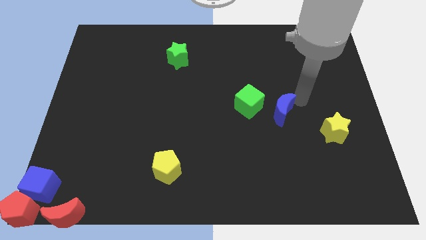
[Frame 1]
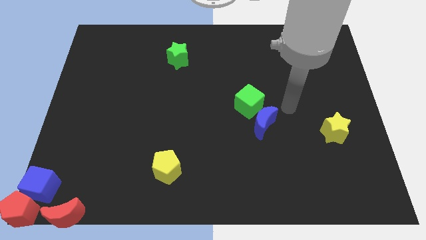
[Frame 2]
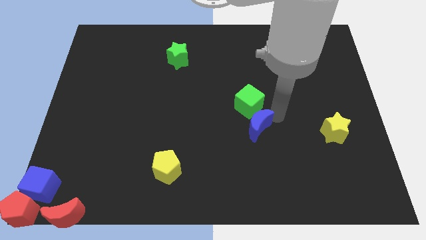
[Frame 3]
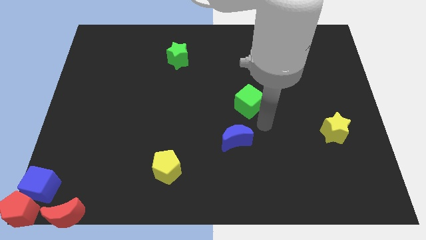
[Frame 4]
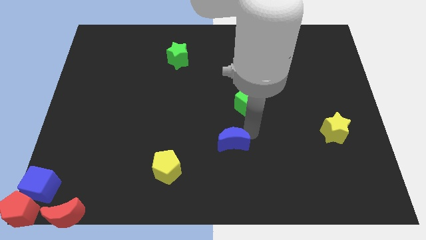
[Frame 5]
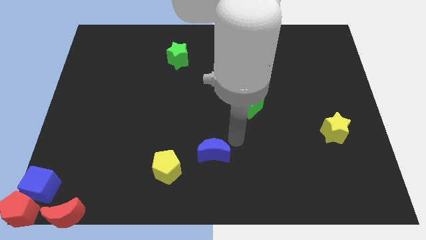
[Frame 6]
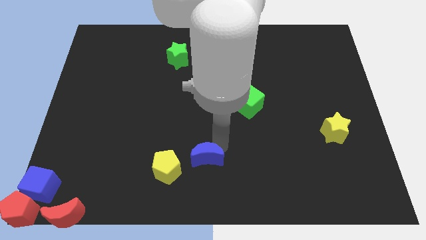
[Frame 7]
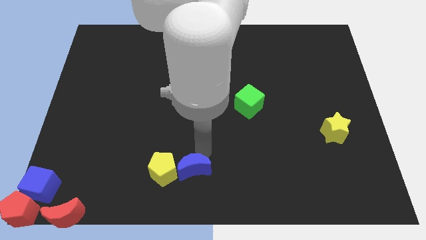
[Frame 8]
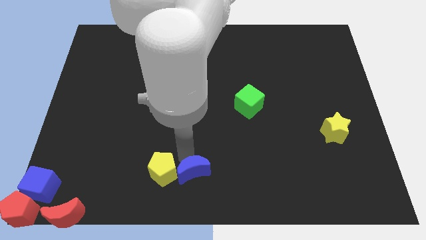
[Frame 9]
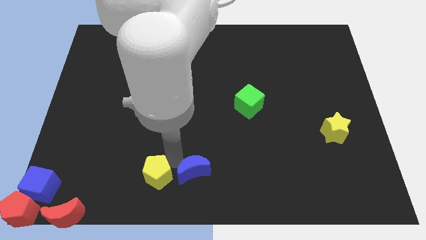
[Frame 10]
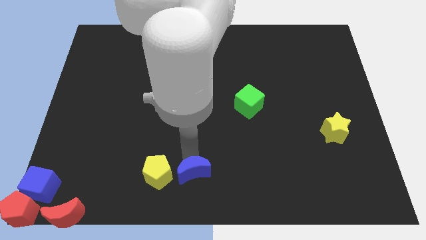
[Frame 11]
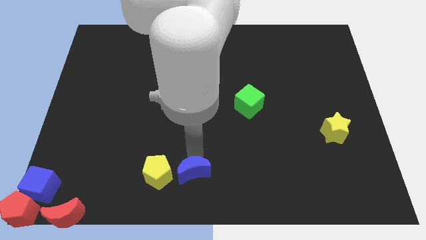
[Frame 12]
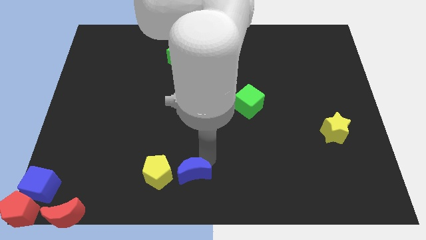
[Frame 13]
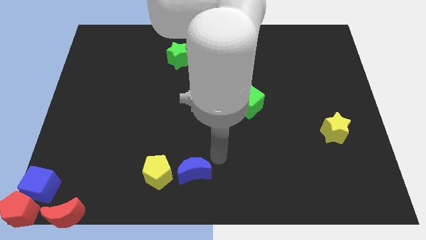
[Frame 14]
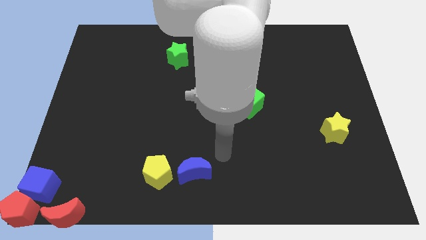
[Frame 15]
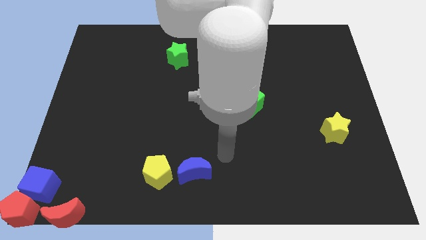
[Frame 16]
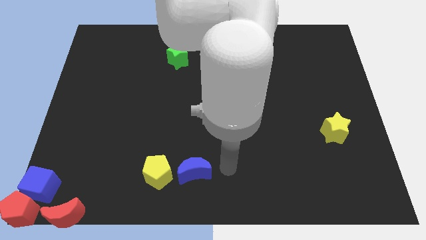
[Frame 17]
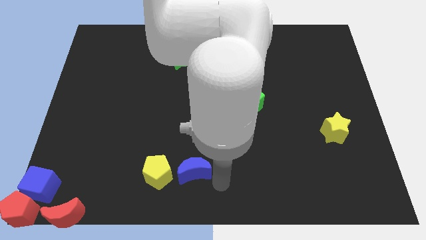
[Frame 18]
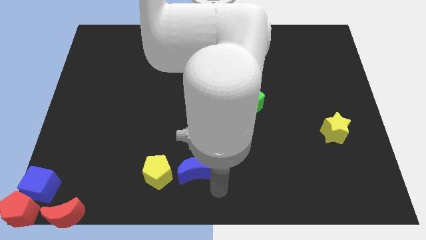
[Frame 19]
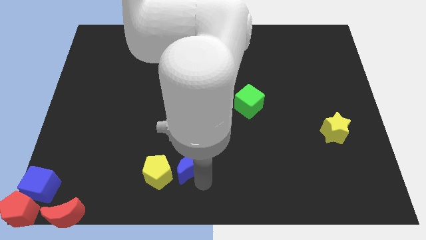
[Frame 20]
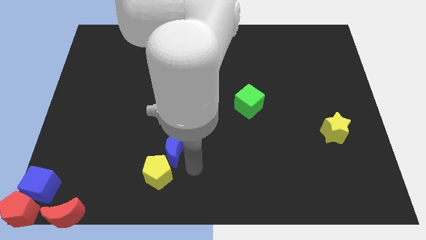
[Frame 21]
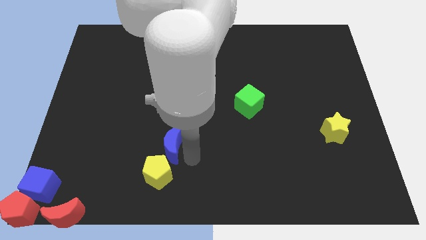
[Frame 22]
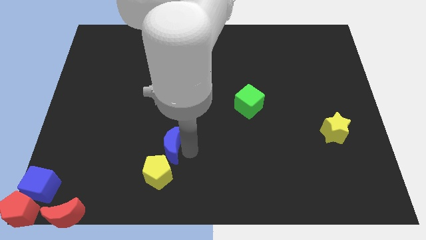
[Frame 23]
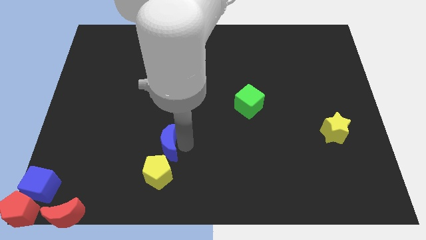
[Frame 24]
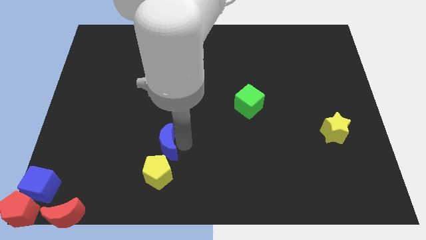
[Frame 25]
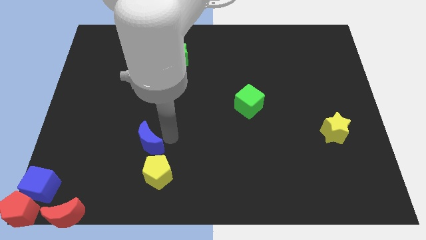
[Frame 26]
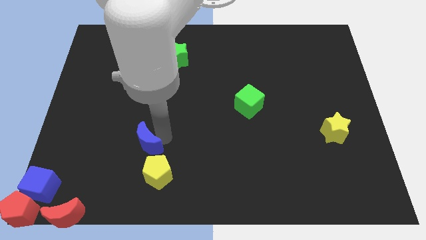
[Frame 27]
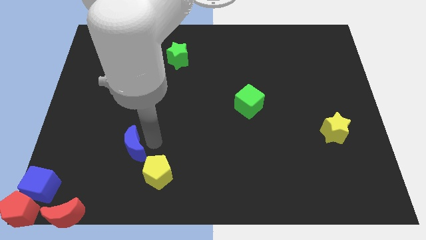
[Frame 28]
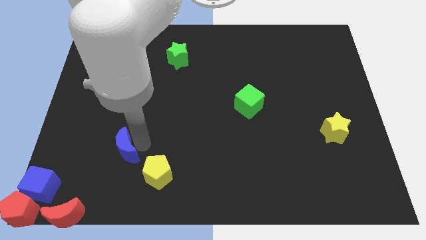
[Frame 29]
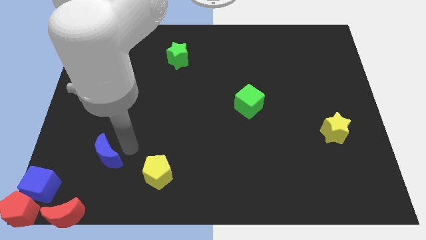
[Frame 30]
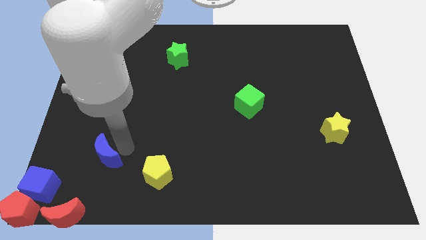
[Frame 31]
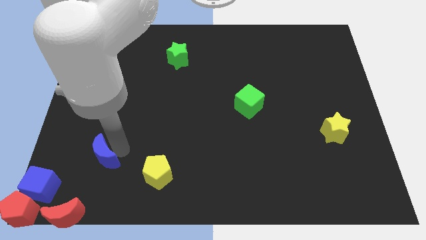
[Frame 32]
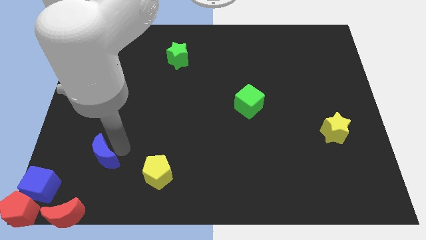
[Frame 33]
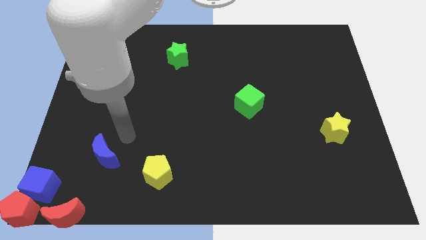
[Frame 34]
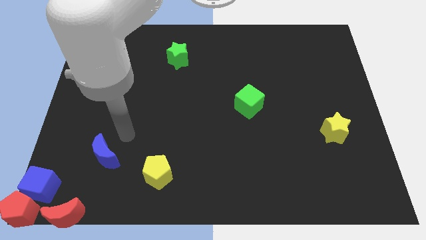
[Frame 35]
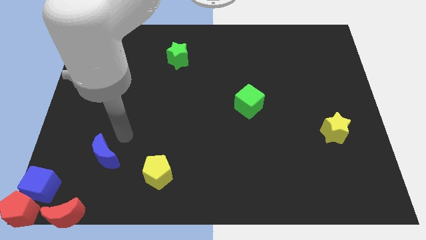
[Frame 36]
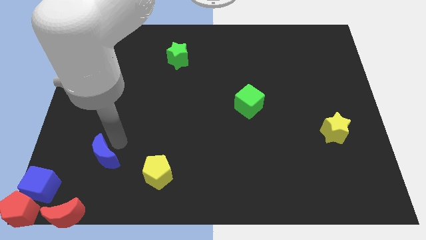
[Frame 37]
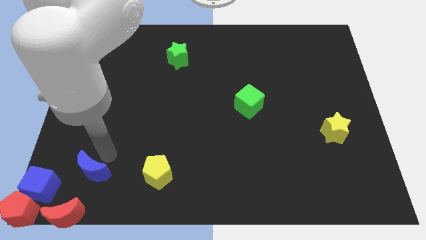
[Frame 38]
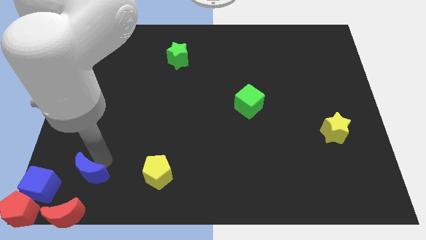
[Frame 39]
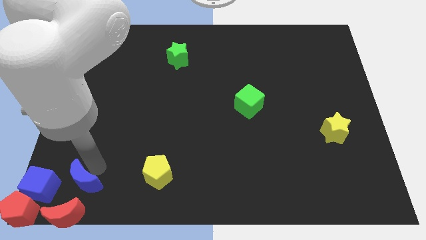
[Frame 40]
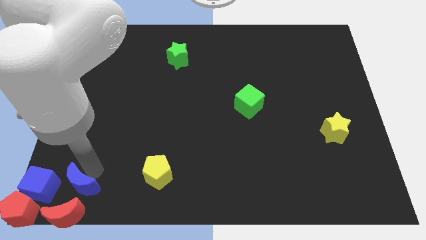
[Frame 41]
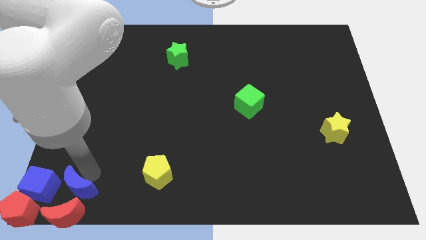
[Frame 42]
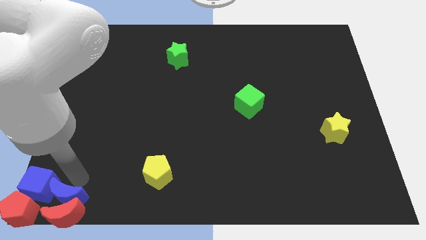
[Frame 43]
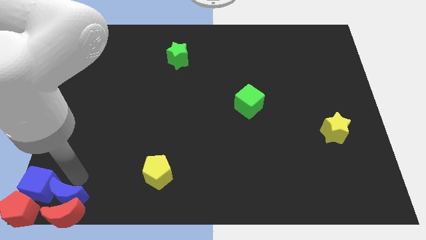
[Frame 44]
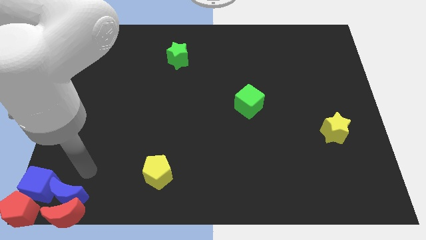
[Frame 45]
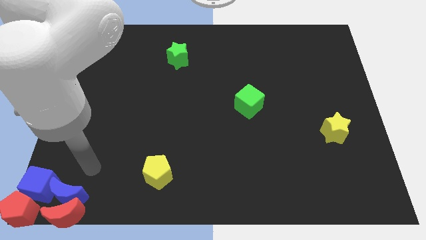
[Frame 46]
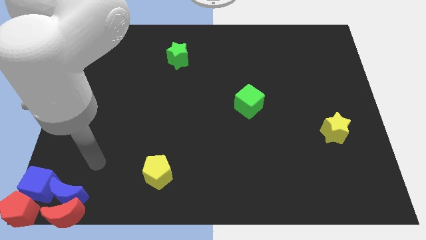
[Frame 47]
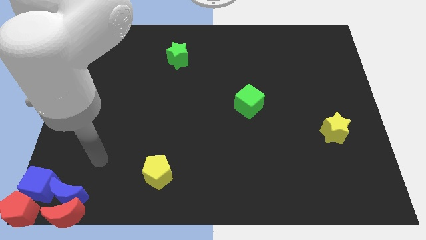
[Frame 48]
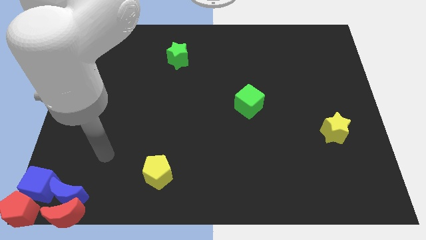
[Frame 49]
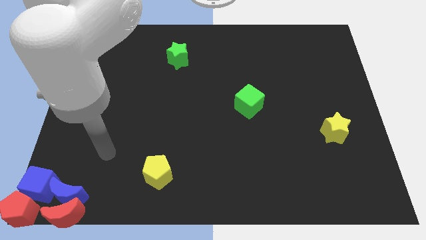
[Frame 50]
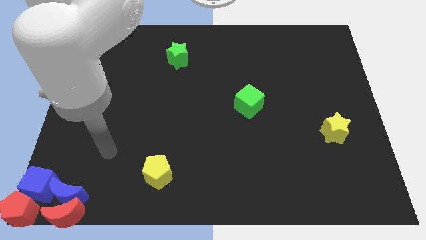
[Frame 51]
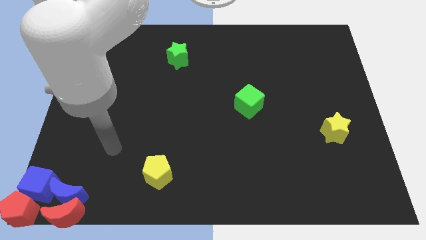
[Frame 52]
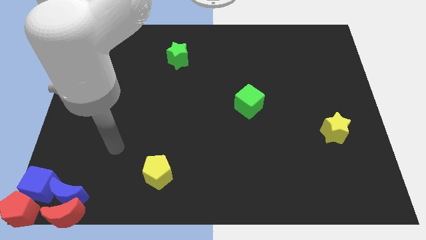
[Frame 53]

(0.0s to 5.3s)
place the blue crescent above to the red crescent

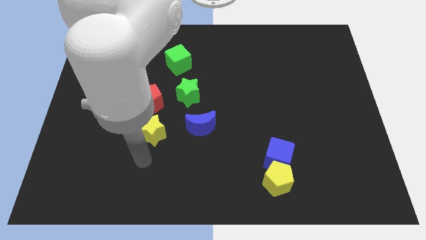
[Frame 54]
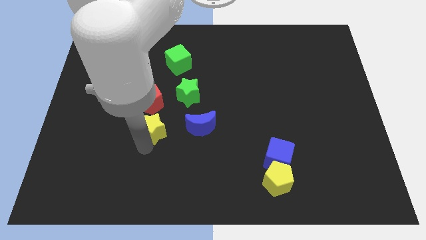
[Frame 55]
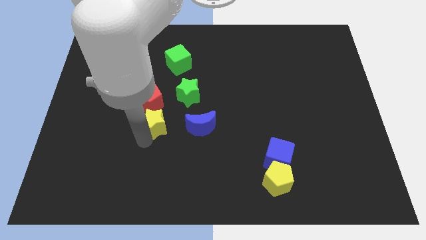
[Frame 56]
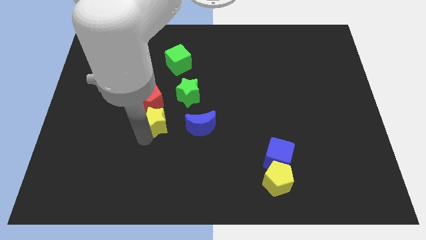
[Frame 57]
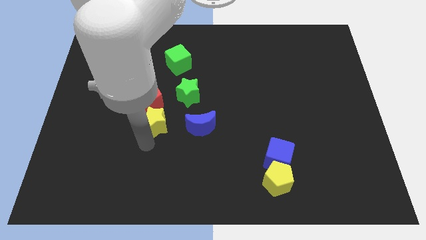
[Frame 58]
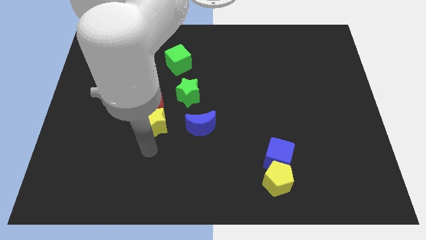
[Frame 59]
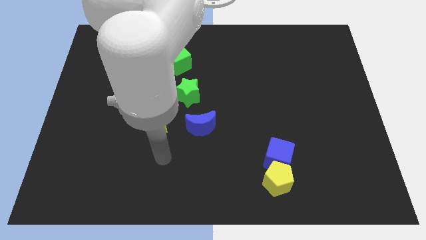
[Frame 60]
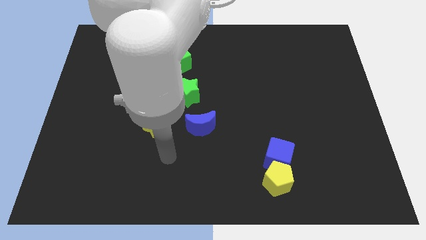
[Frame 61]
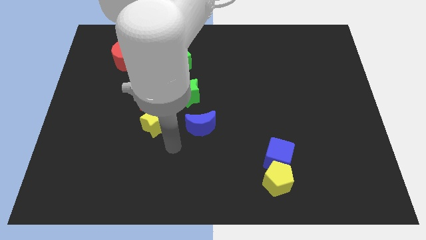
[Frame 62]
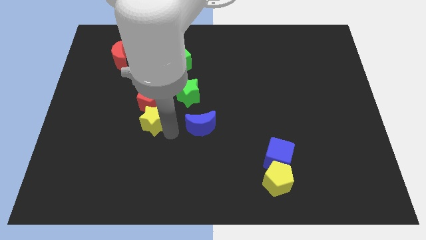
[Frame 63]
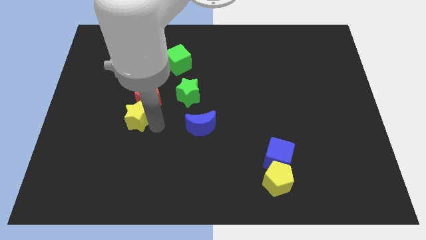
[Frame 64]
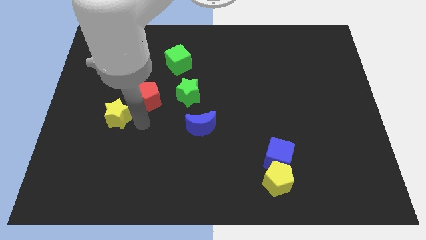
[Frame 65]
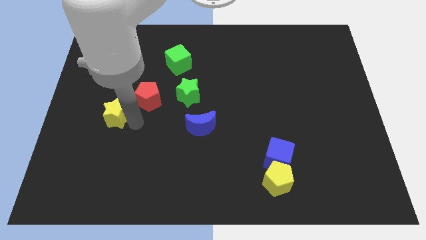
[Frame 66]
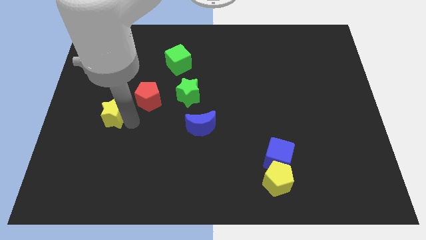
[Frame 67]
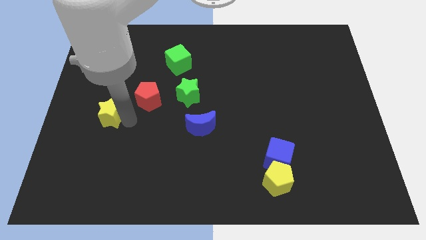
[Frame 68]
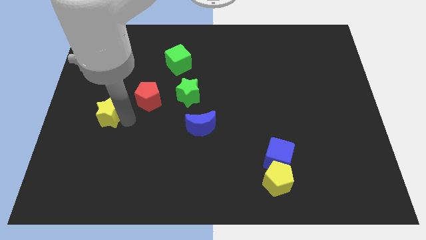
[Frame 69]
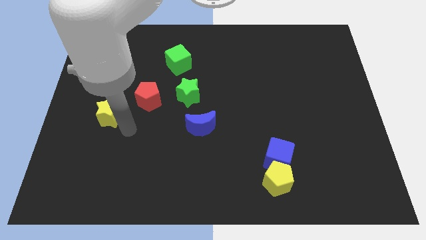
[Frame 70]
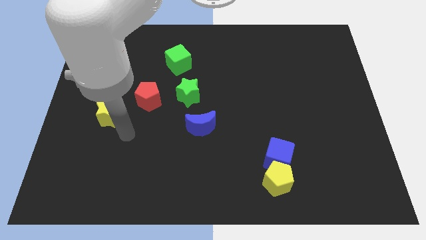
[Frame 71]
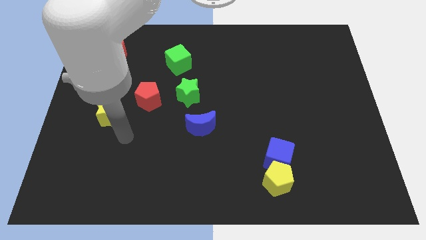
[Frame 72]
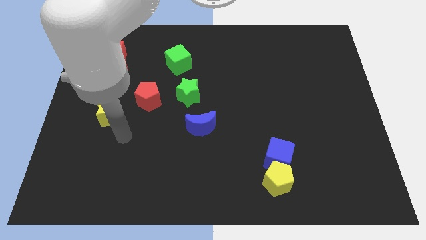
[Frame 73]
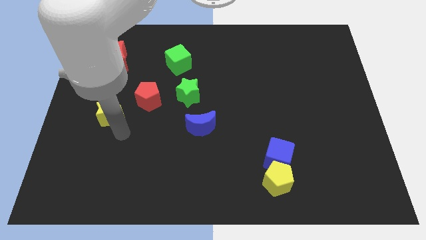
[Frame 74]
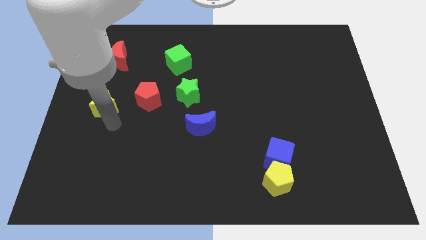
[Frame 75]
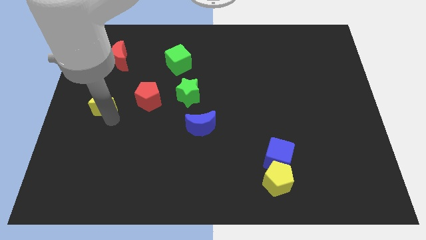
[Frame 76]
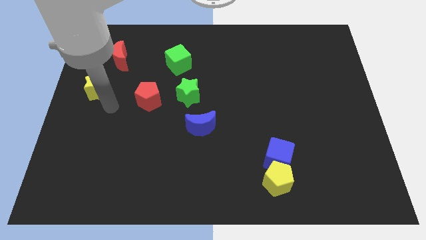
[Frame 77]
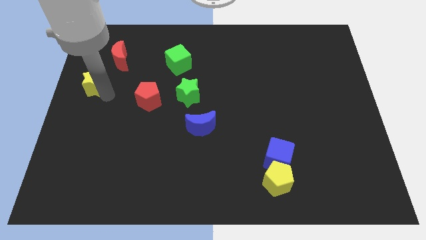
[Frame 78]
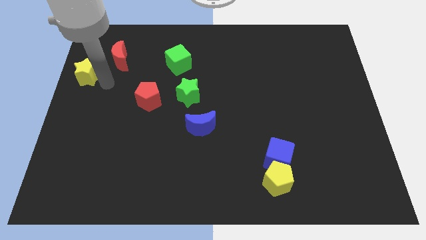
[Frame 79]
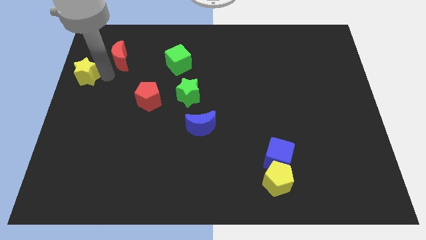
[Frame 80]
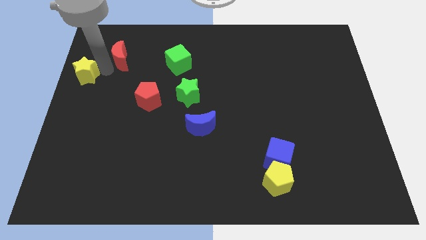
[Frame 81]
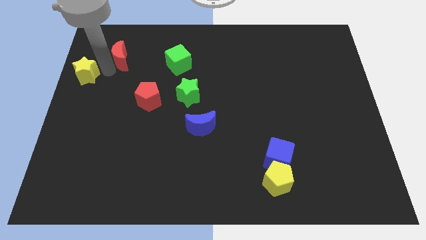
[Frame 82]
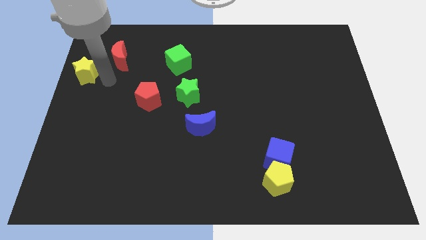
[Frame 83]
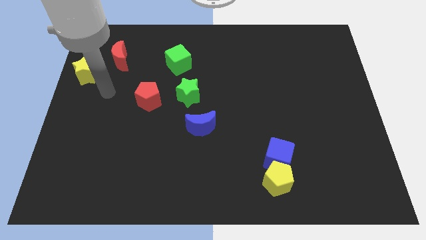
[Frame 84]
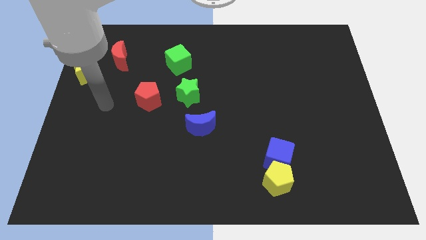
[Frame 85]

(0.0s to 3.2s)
separate the yellow star from the red pentagon

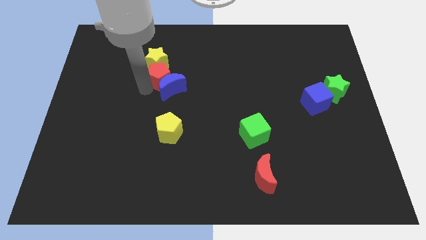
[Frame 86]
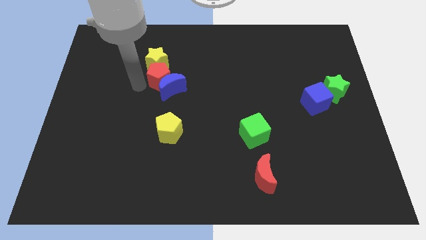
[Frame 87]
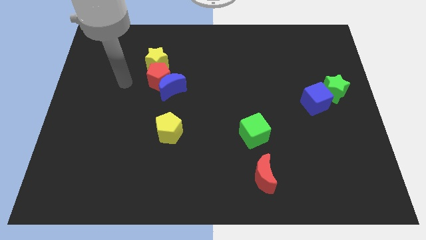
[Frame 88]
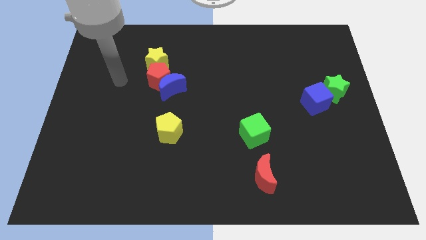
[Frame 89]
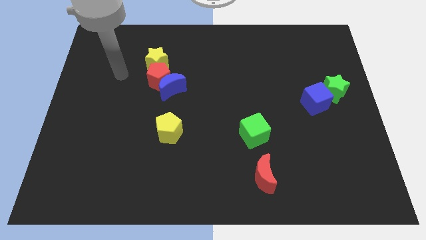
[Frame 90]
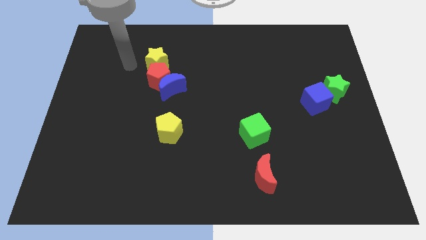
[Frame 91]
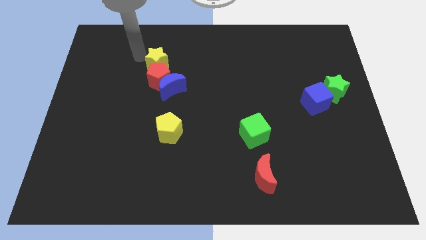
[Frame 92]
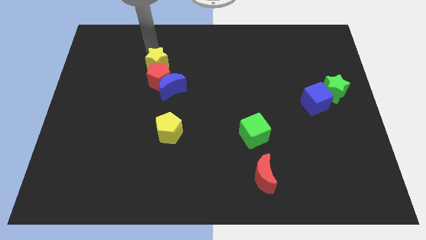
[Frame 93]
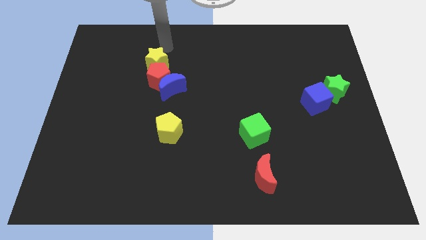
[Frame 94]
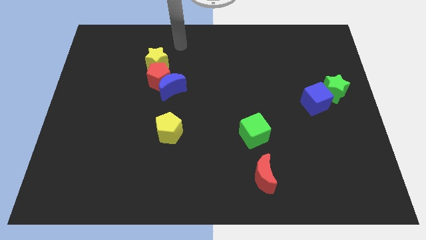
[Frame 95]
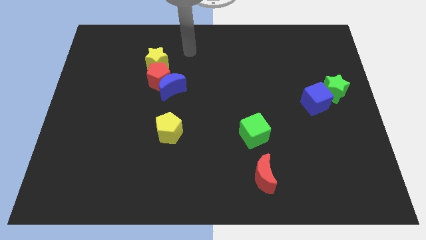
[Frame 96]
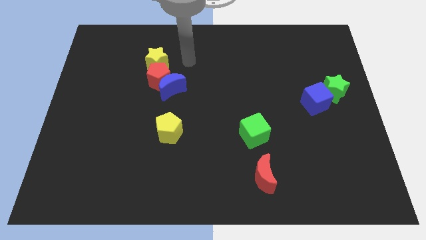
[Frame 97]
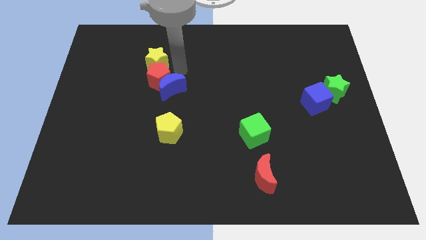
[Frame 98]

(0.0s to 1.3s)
place your hand to the right of the red pentagon
